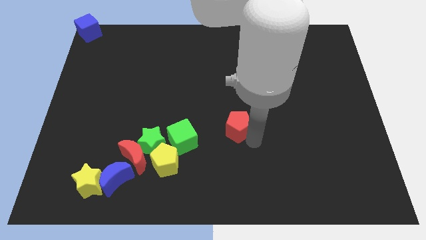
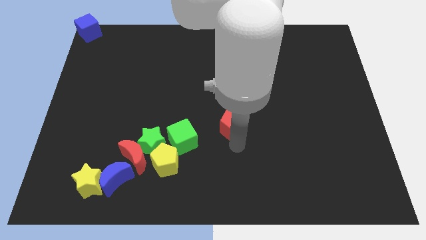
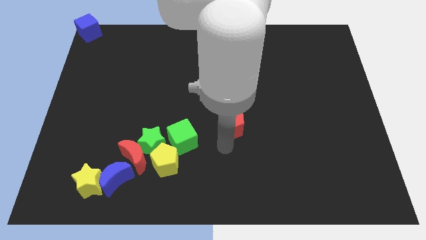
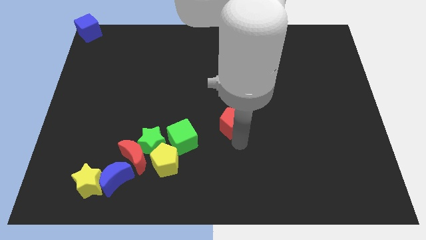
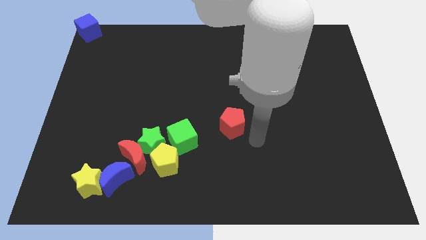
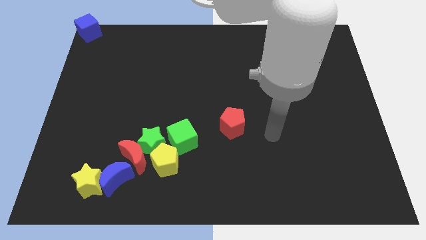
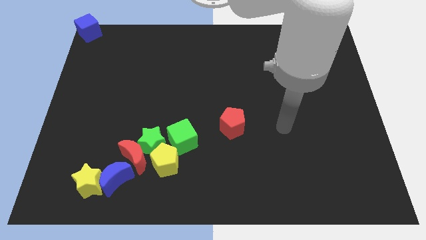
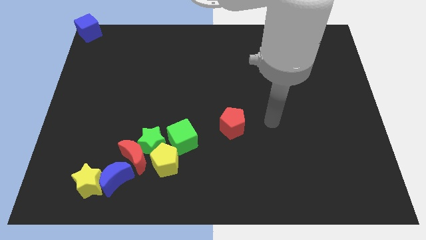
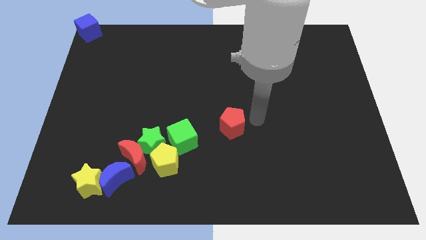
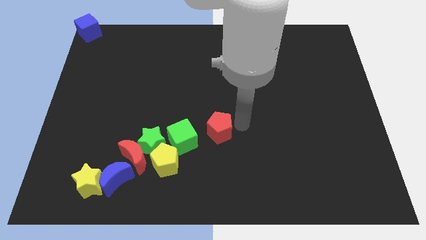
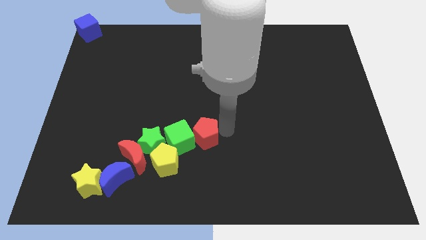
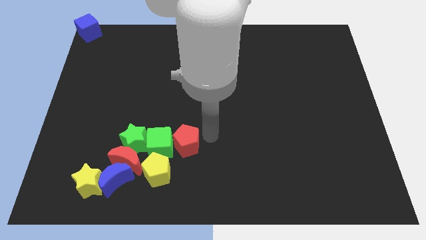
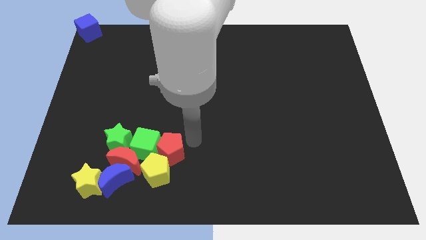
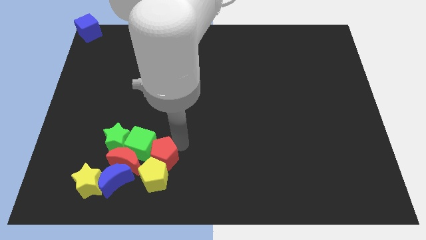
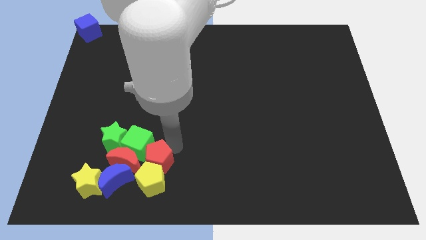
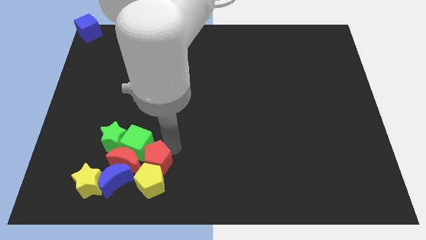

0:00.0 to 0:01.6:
push the red pentagon into the group of blocks

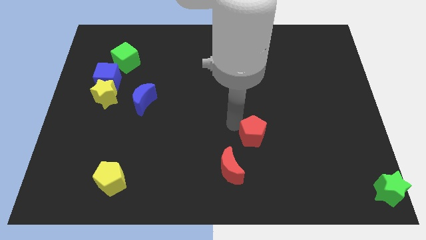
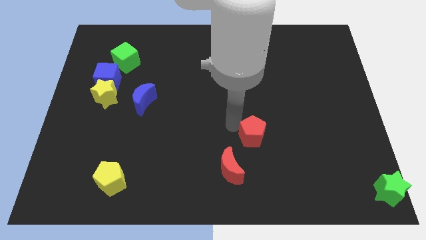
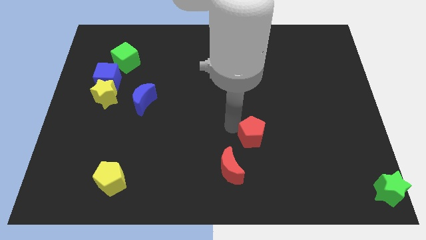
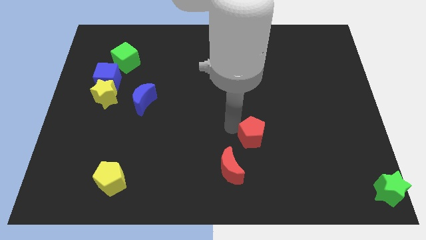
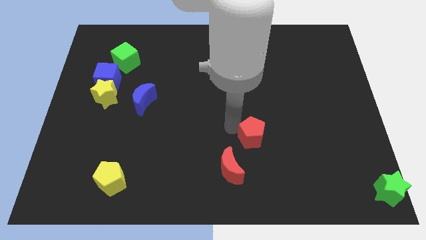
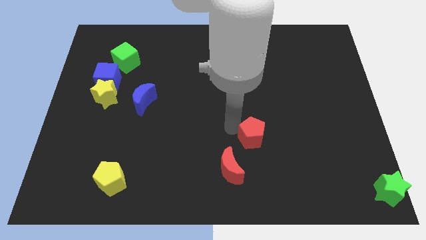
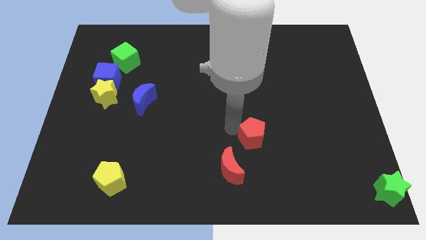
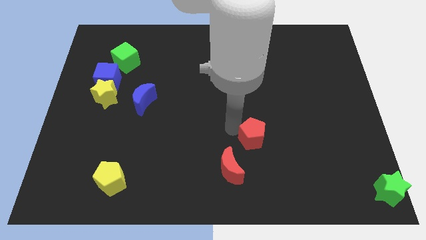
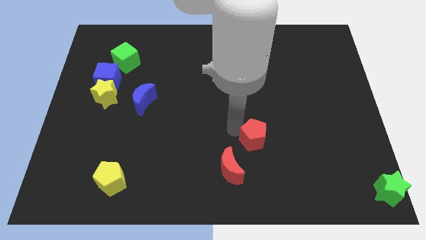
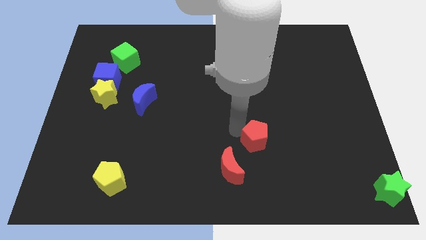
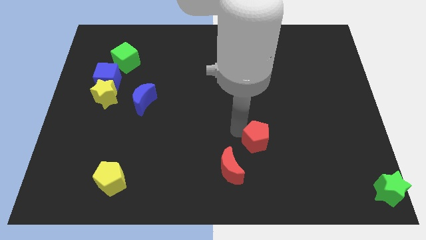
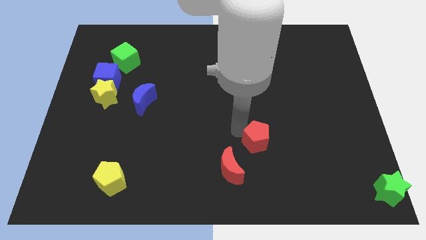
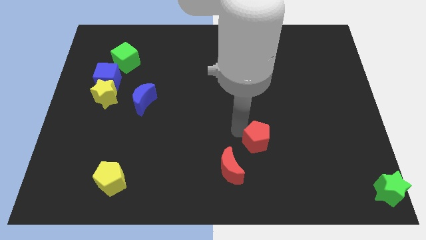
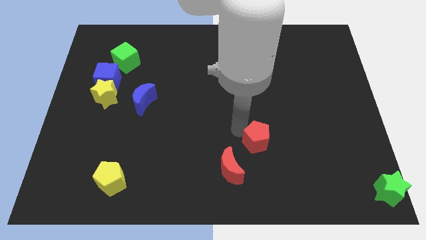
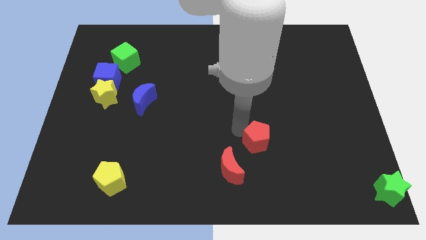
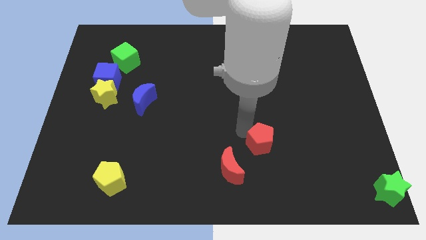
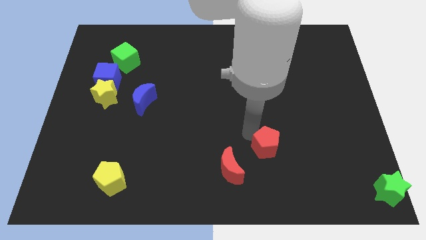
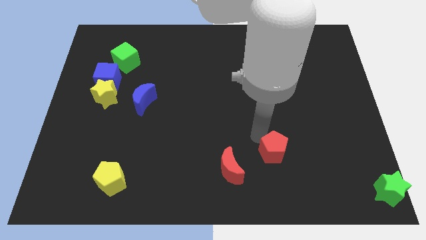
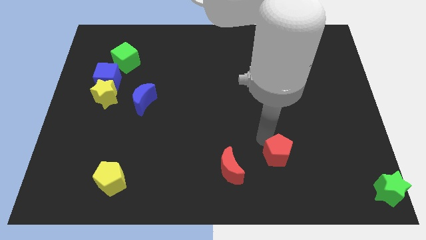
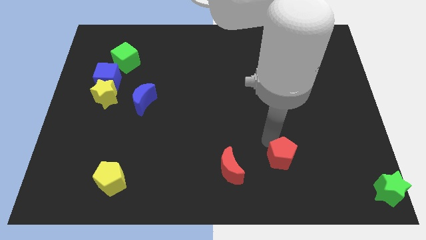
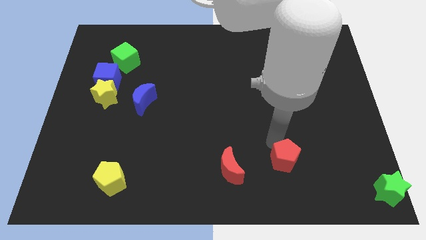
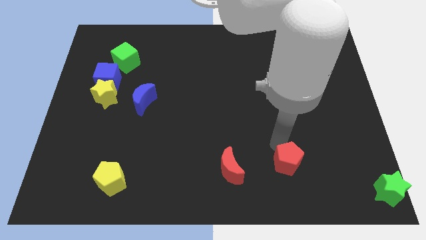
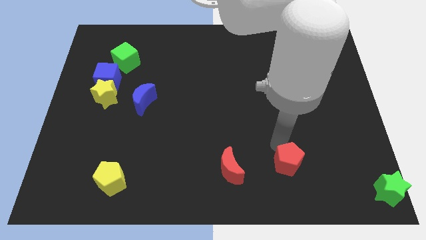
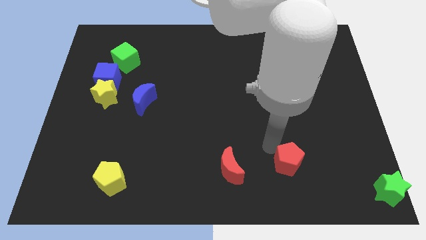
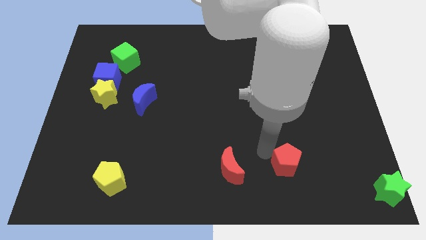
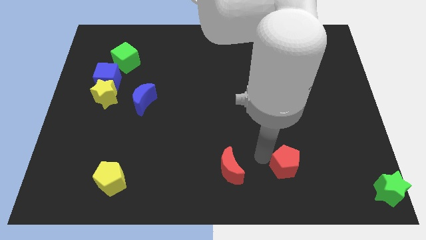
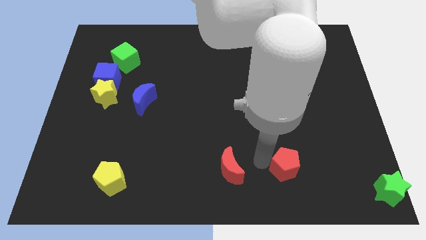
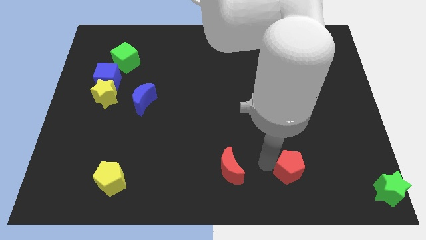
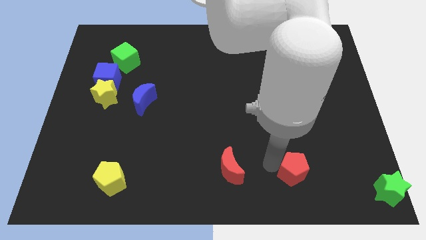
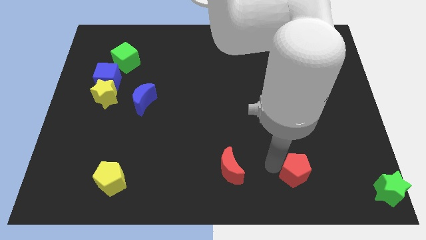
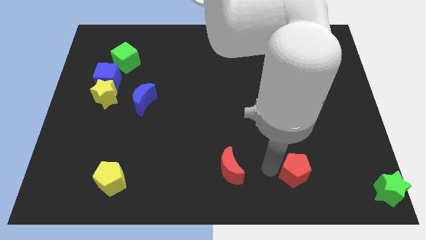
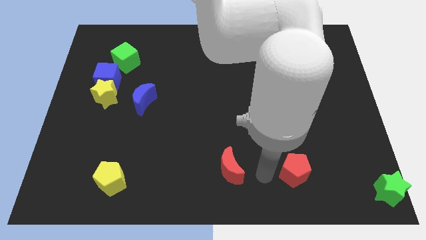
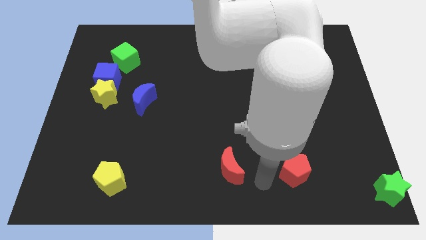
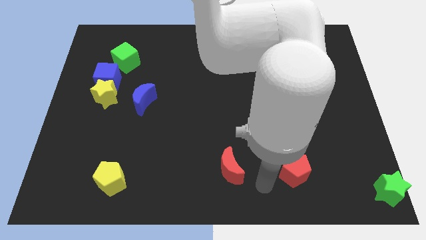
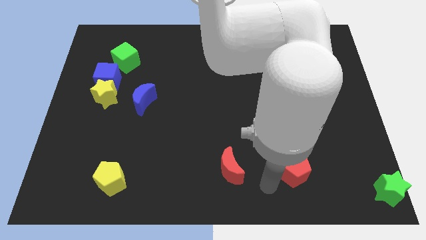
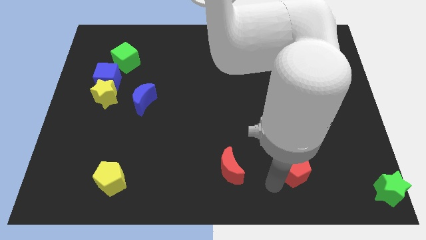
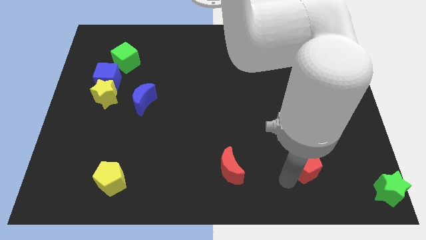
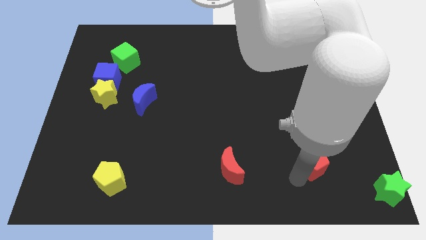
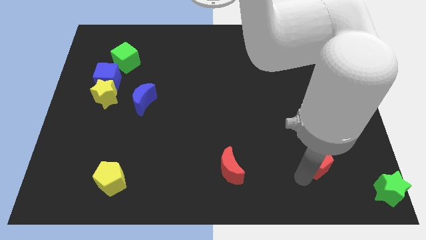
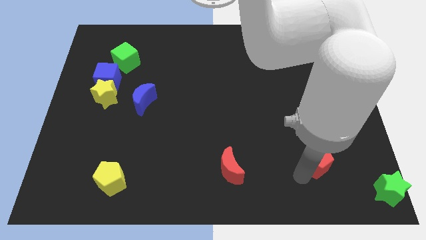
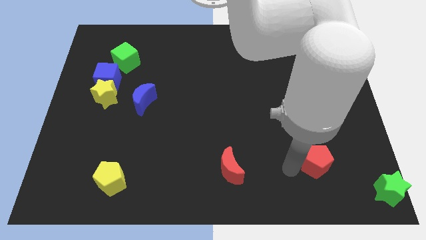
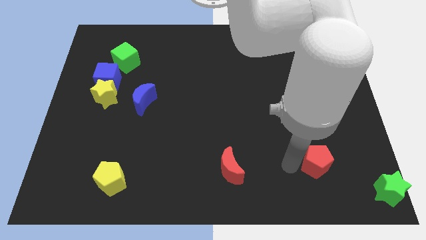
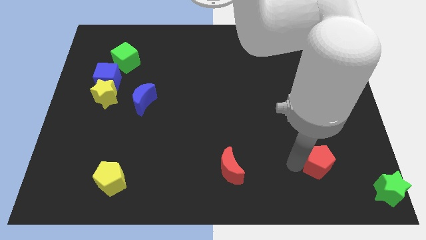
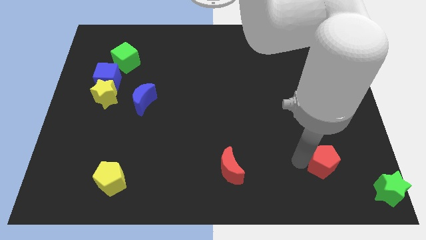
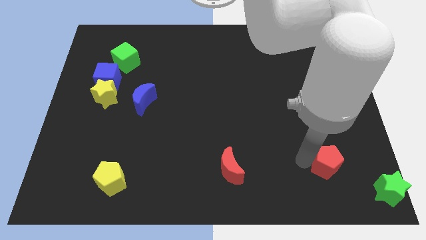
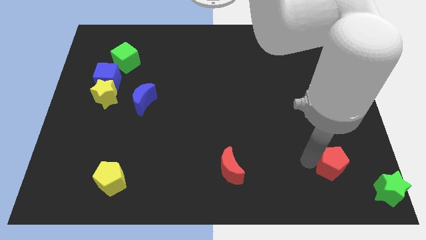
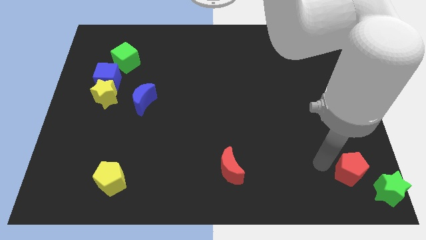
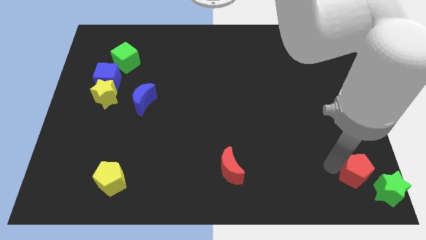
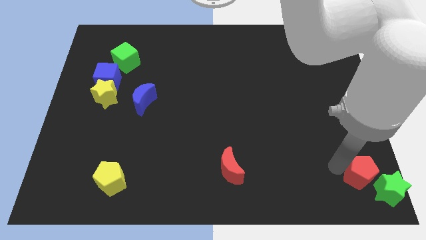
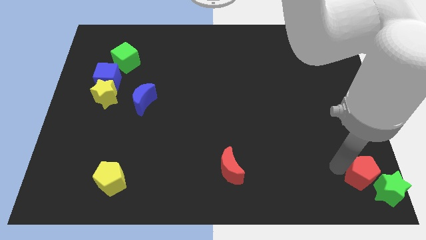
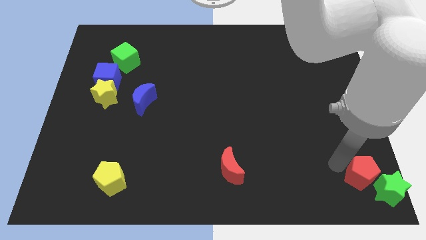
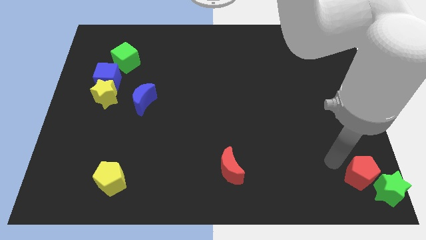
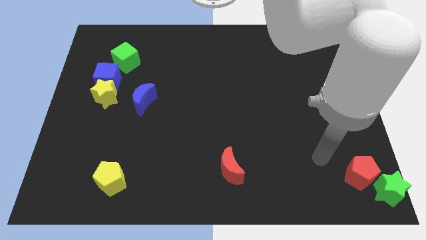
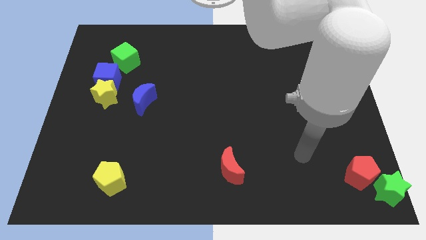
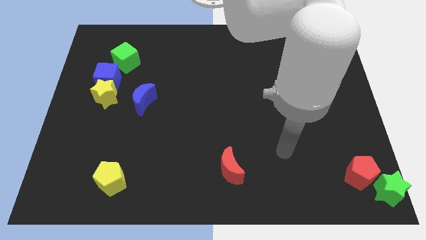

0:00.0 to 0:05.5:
move the red pentagon towards the green star

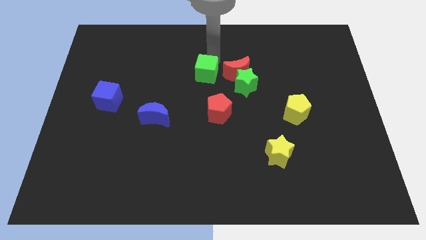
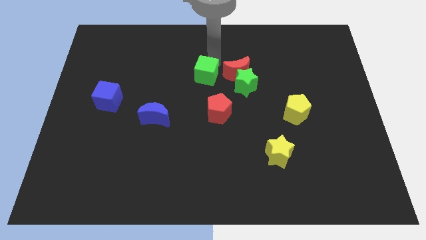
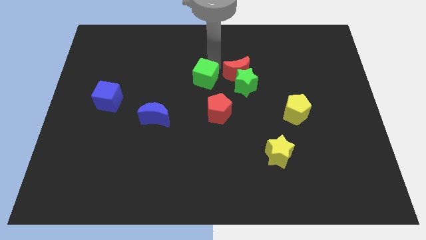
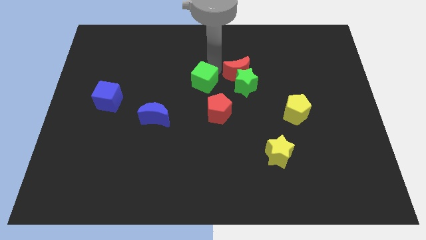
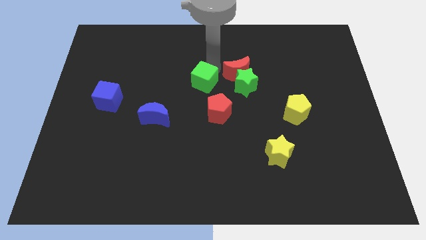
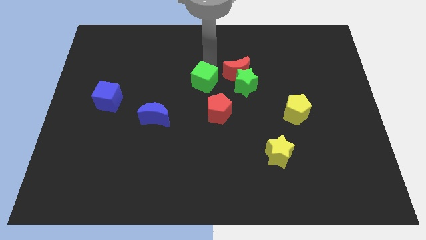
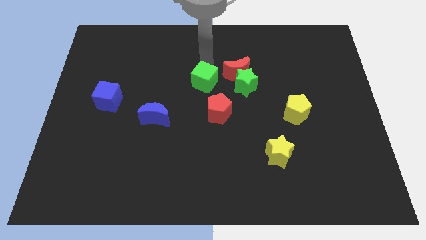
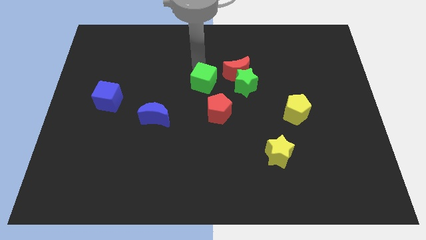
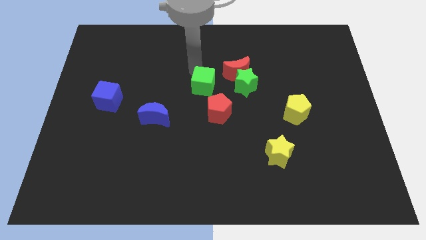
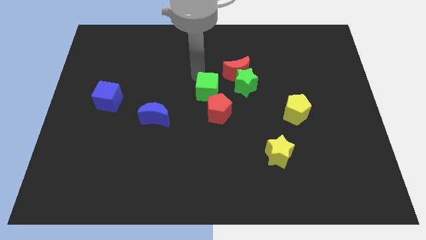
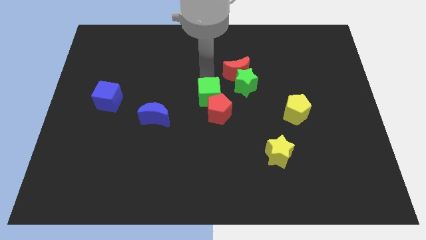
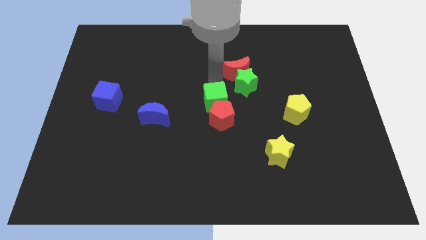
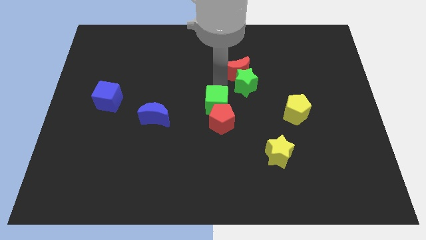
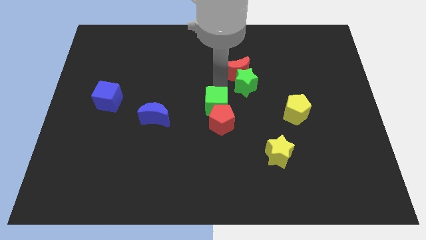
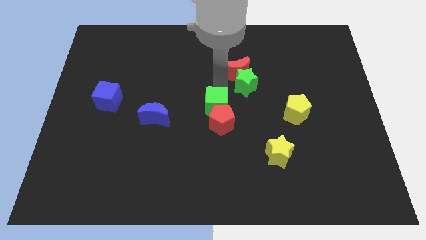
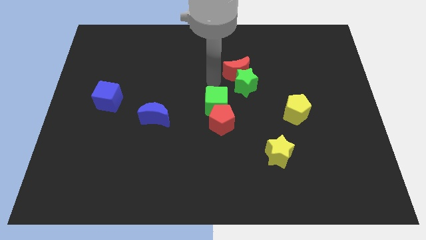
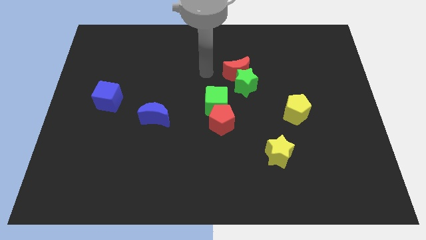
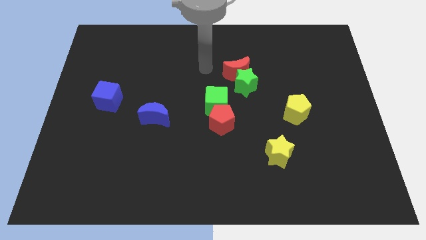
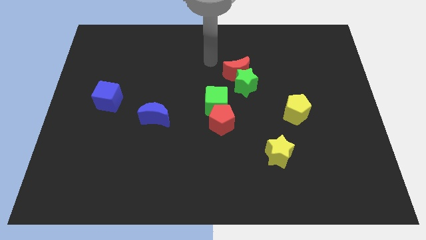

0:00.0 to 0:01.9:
place the green cube on top of the red pentagon

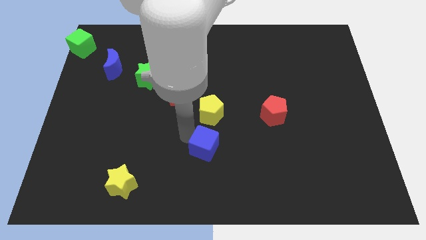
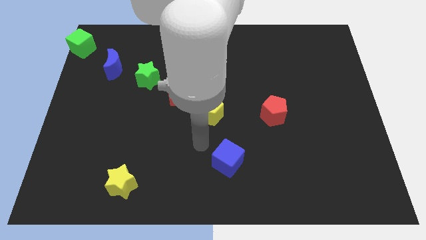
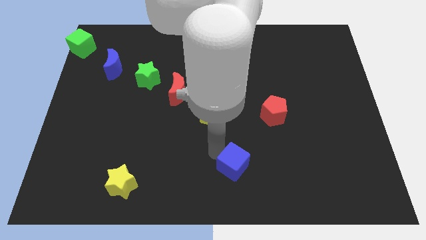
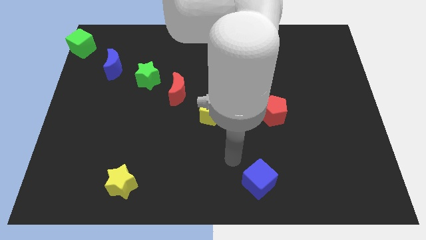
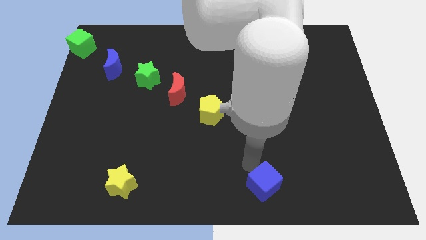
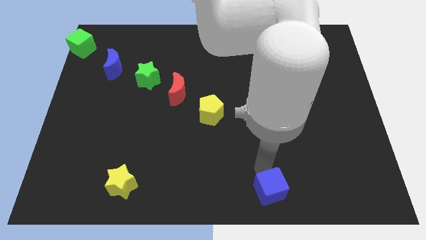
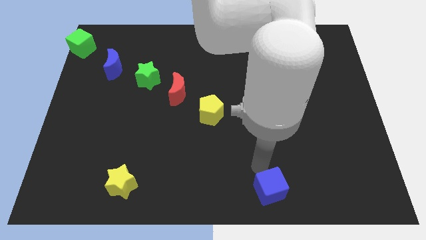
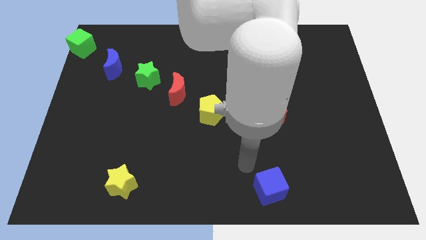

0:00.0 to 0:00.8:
push the blue cube to right below
